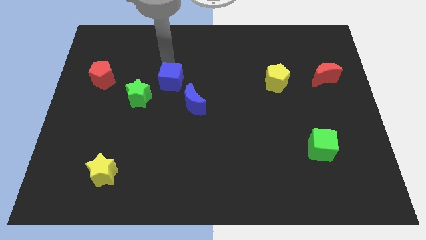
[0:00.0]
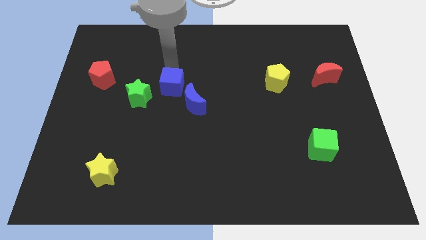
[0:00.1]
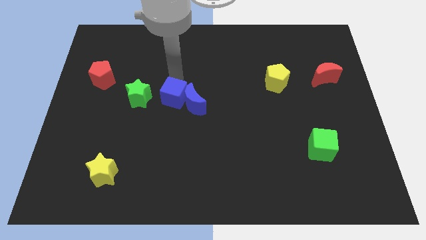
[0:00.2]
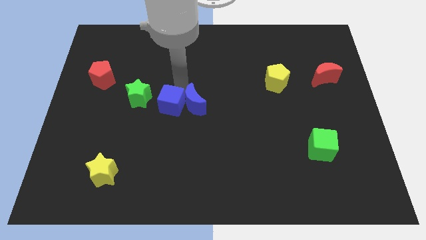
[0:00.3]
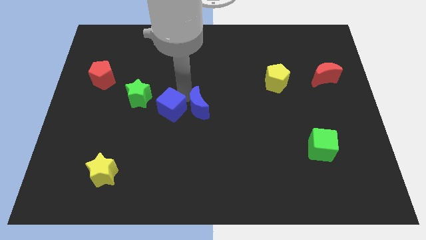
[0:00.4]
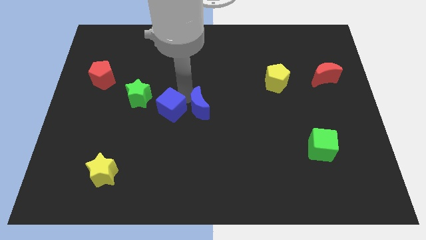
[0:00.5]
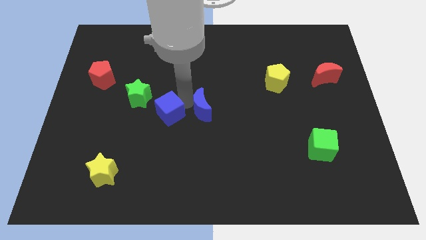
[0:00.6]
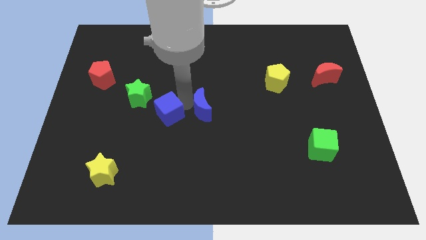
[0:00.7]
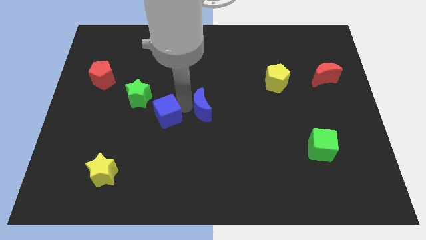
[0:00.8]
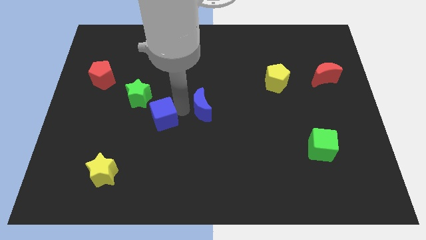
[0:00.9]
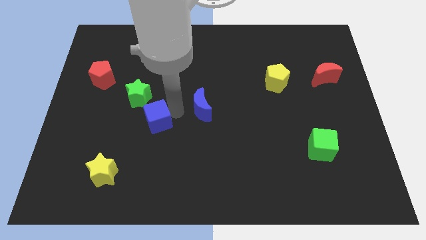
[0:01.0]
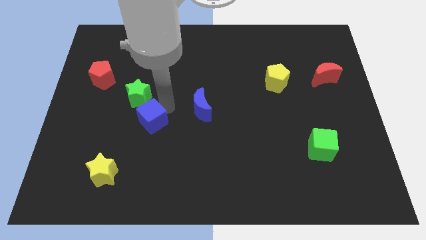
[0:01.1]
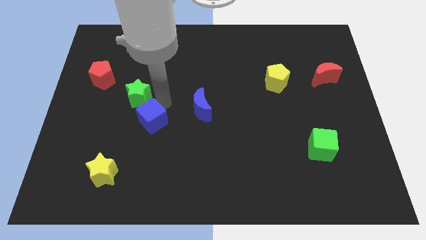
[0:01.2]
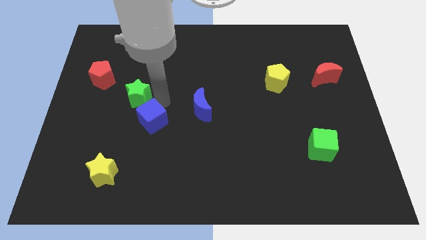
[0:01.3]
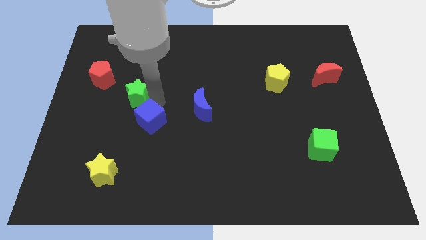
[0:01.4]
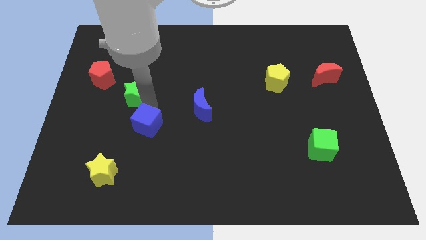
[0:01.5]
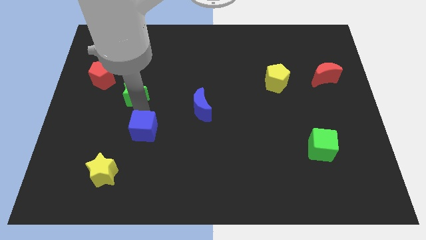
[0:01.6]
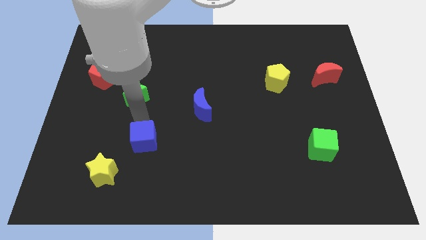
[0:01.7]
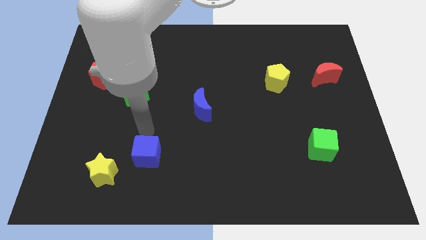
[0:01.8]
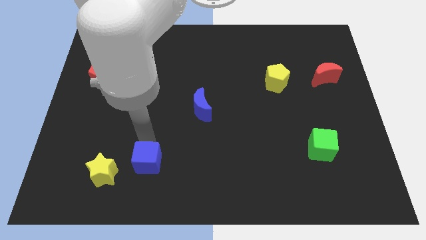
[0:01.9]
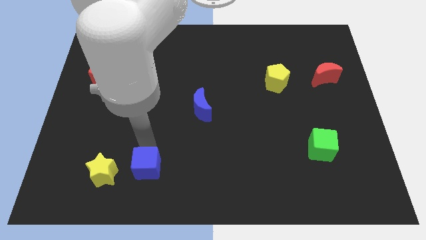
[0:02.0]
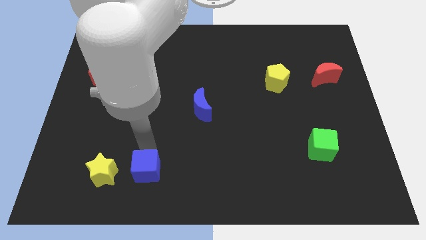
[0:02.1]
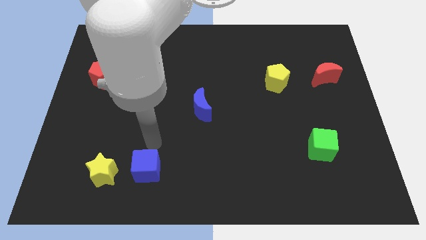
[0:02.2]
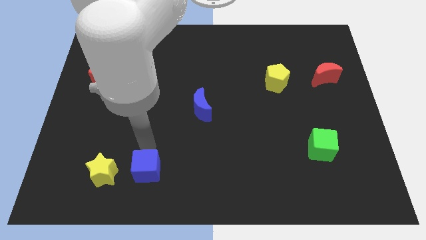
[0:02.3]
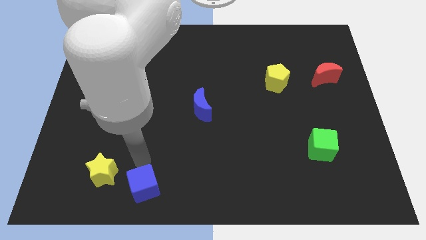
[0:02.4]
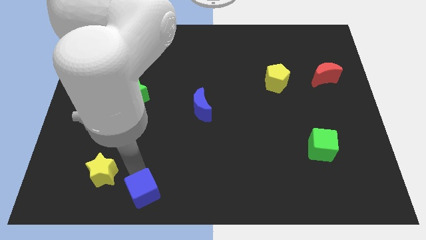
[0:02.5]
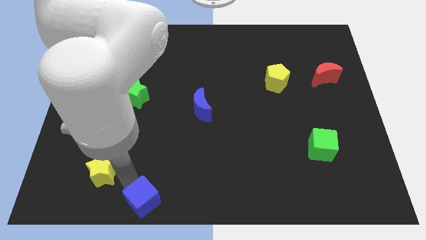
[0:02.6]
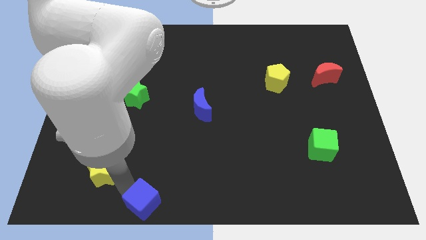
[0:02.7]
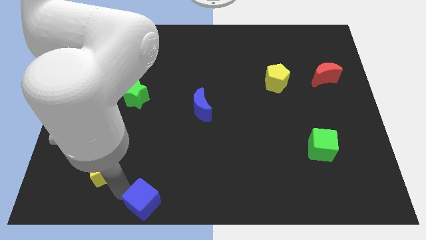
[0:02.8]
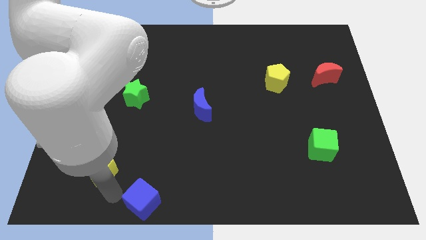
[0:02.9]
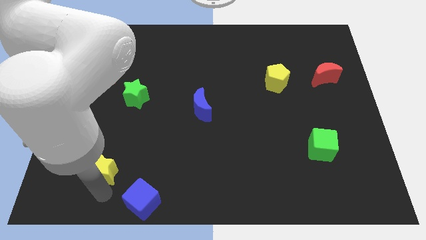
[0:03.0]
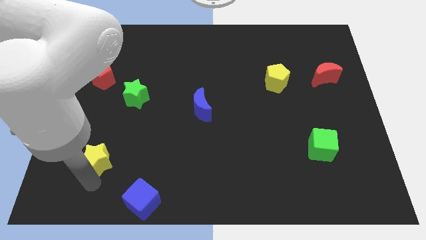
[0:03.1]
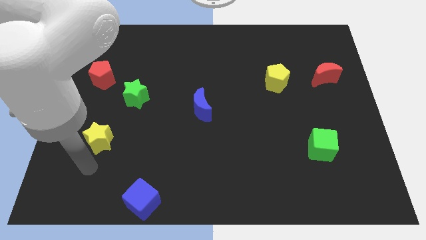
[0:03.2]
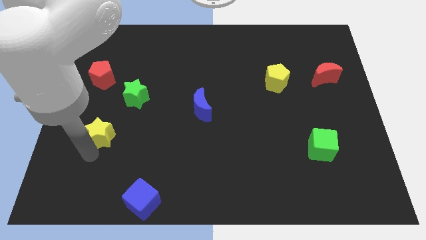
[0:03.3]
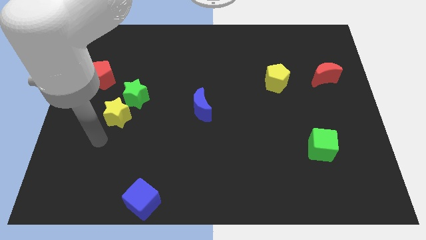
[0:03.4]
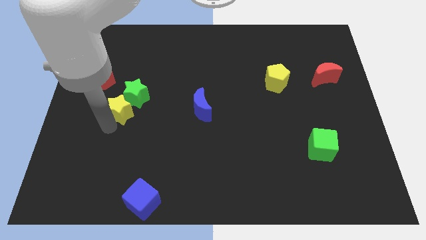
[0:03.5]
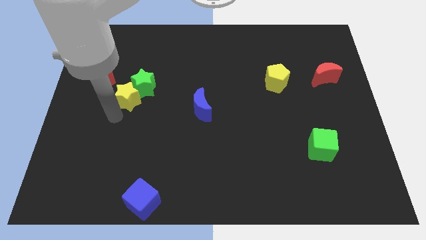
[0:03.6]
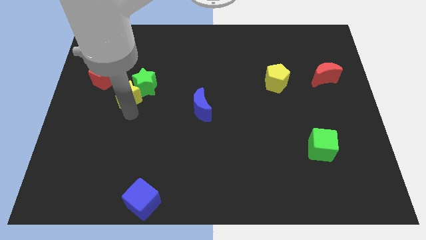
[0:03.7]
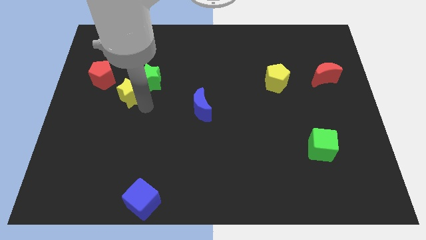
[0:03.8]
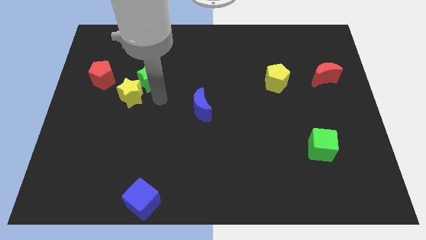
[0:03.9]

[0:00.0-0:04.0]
place the yellow star diagonally bottom right to the red pentagon

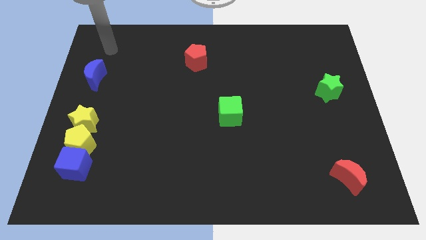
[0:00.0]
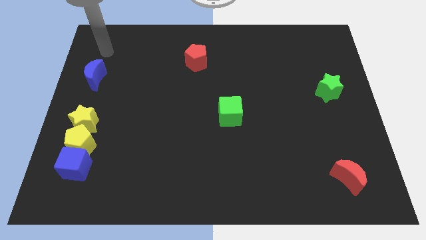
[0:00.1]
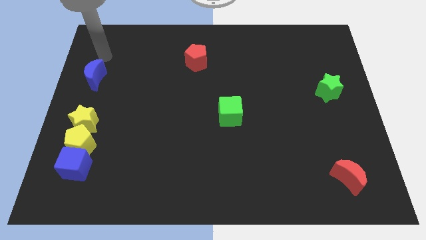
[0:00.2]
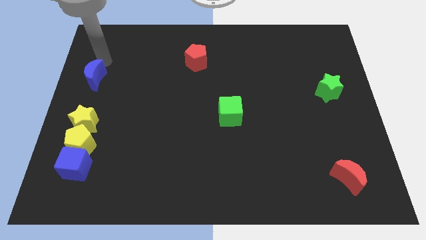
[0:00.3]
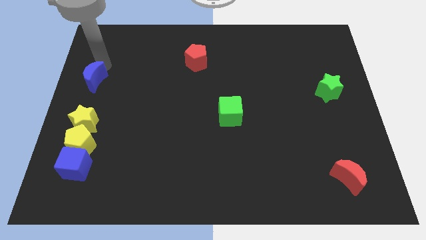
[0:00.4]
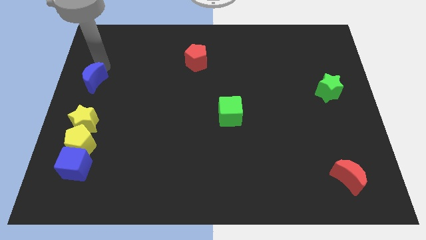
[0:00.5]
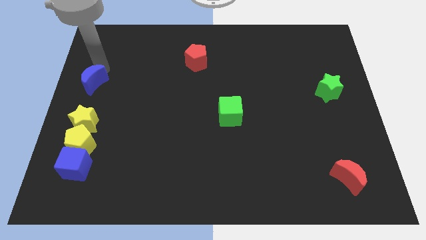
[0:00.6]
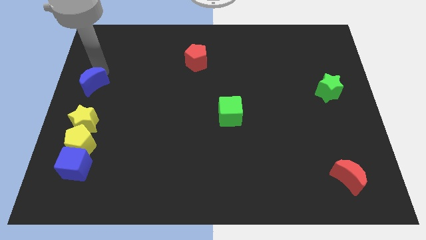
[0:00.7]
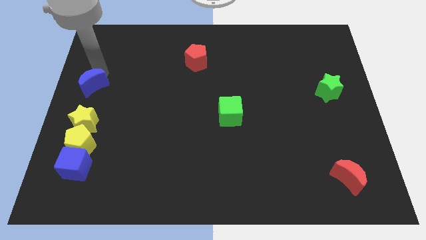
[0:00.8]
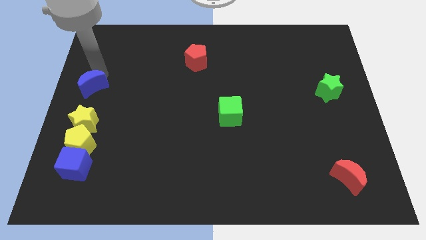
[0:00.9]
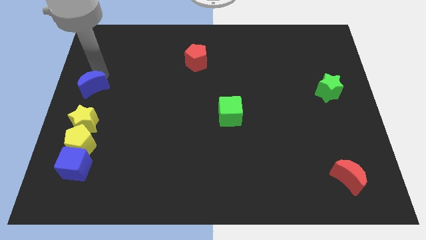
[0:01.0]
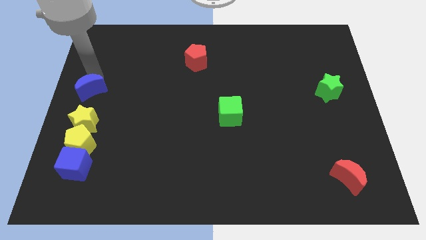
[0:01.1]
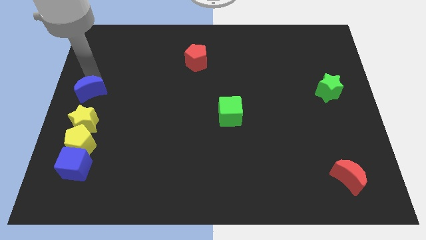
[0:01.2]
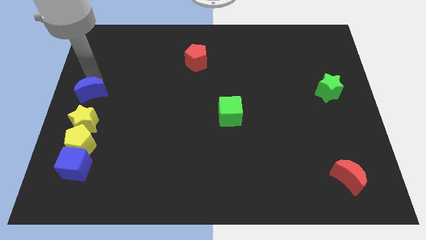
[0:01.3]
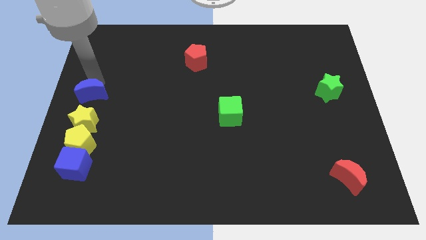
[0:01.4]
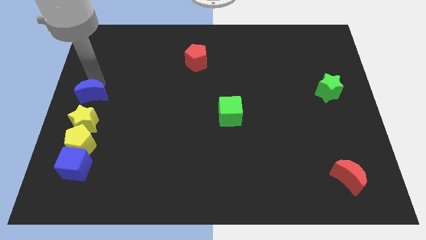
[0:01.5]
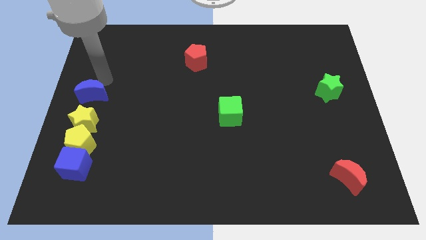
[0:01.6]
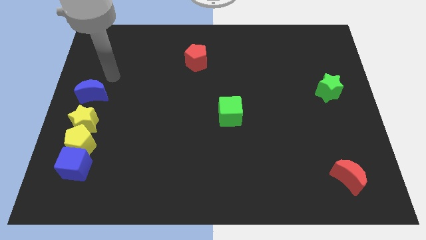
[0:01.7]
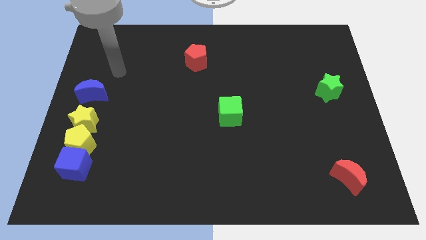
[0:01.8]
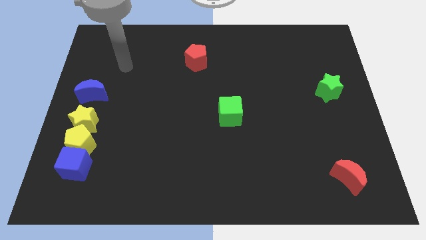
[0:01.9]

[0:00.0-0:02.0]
place the blue moon above yellow star vertically

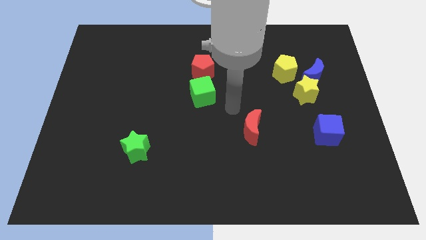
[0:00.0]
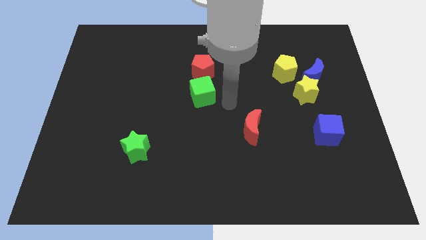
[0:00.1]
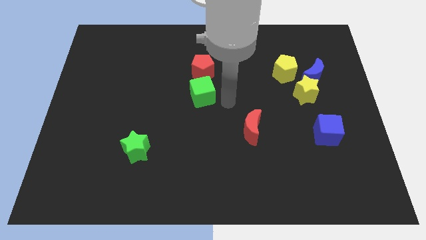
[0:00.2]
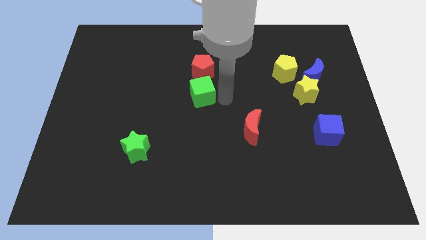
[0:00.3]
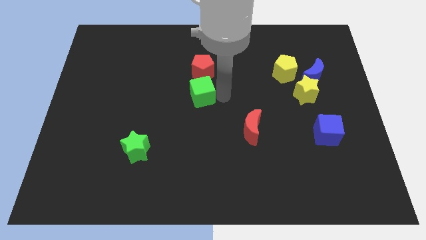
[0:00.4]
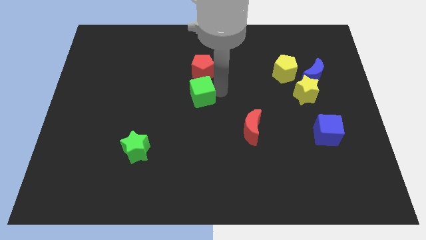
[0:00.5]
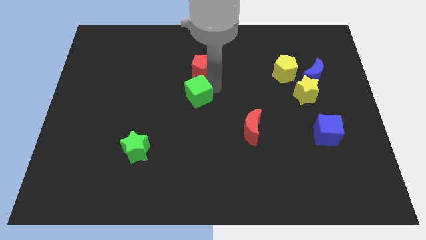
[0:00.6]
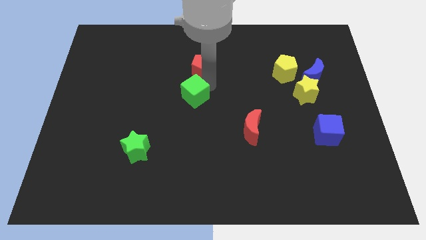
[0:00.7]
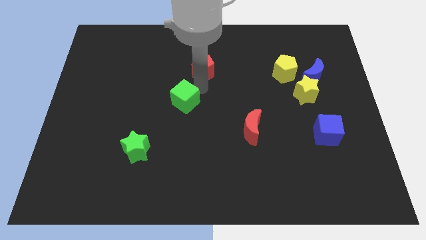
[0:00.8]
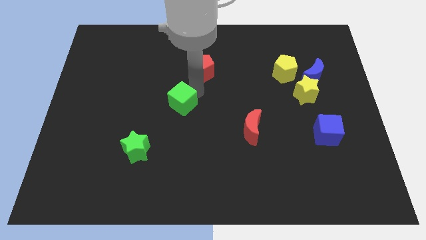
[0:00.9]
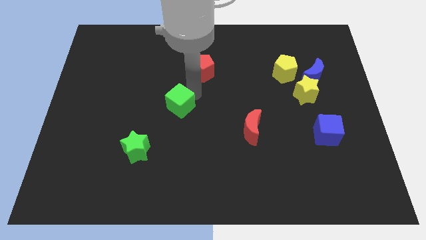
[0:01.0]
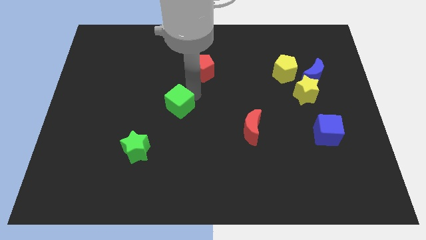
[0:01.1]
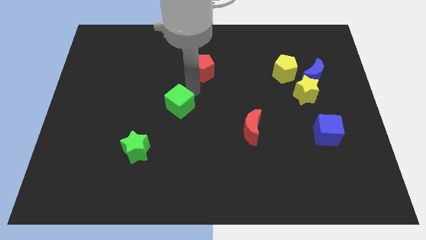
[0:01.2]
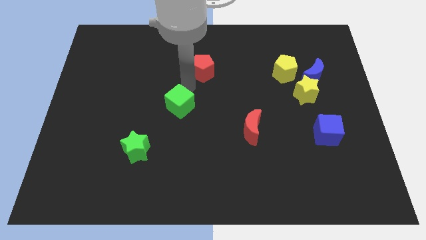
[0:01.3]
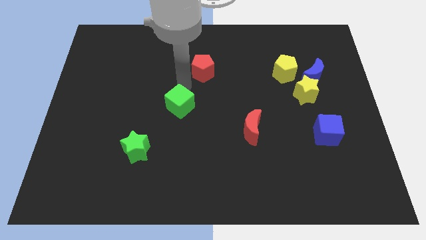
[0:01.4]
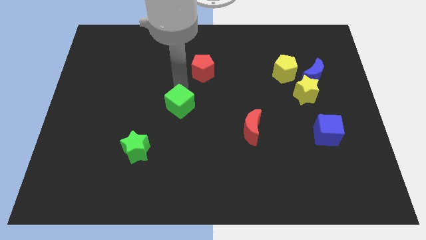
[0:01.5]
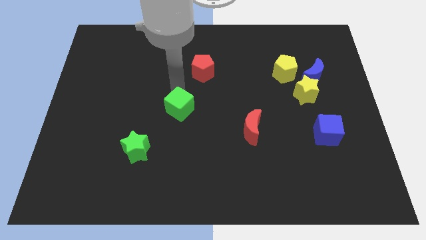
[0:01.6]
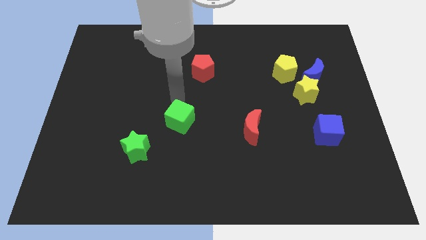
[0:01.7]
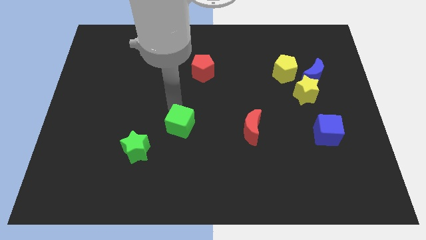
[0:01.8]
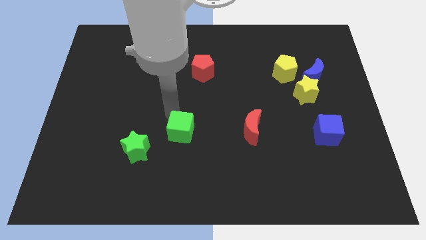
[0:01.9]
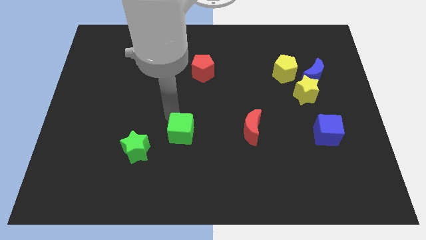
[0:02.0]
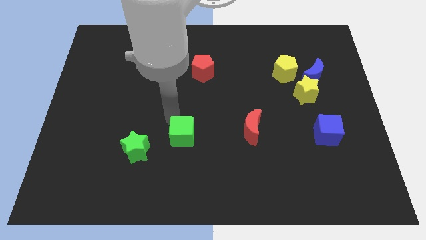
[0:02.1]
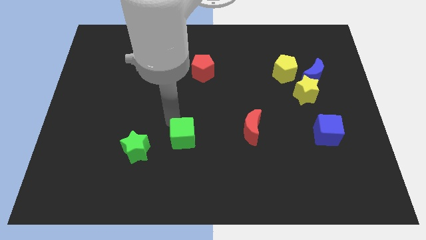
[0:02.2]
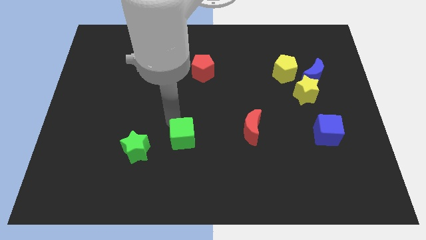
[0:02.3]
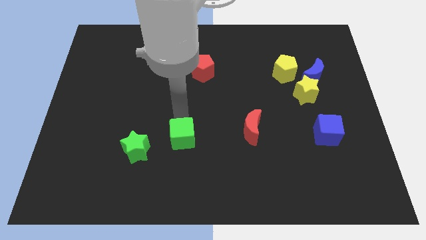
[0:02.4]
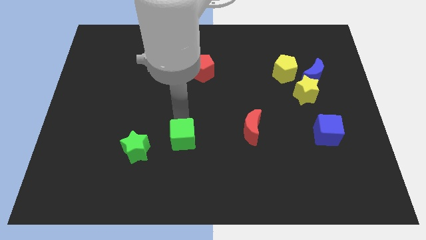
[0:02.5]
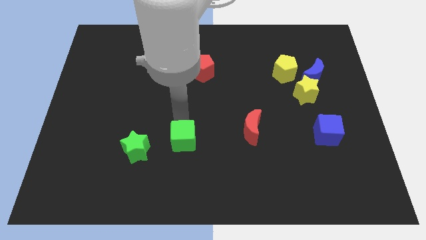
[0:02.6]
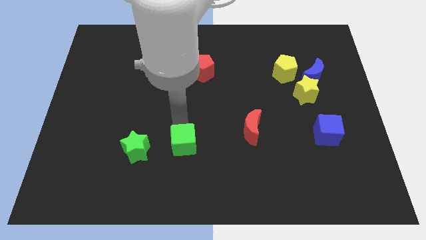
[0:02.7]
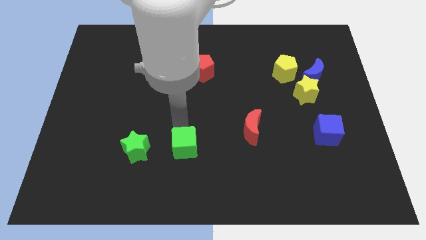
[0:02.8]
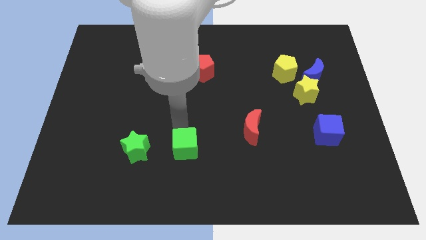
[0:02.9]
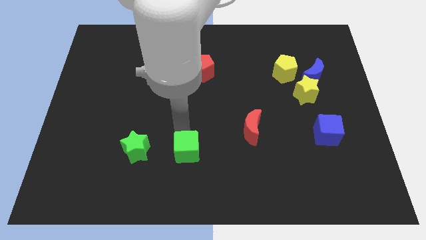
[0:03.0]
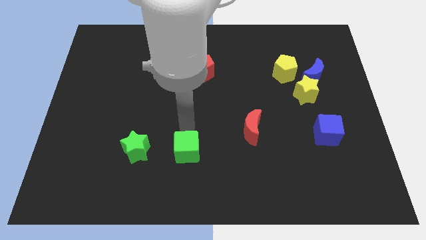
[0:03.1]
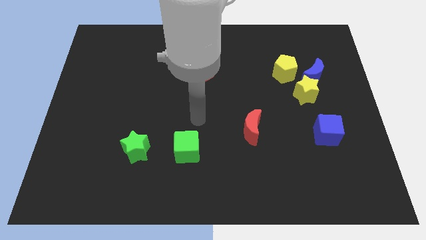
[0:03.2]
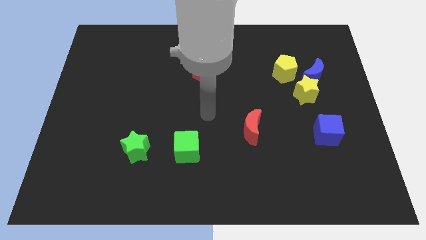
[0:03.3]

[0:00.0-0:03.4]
move the green cube right to the green star
